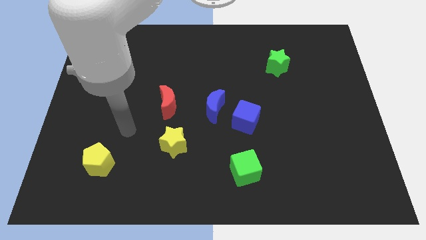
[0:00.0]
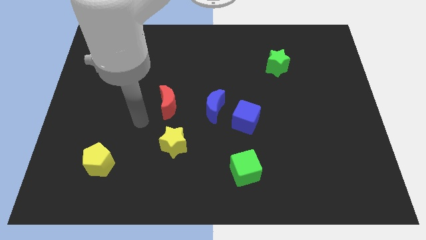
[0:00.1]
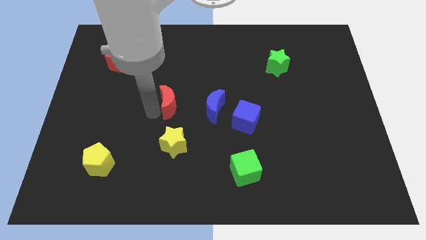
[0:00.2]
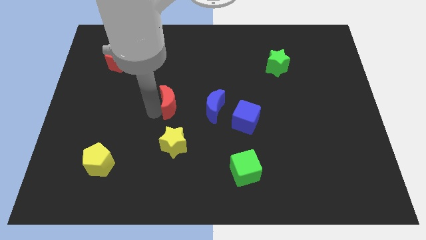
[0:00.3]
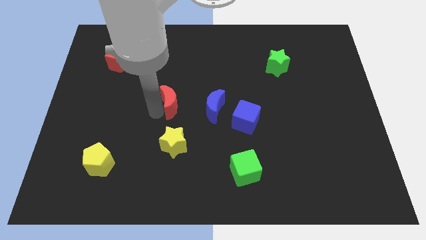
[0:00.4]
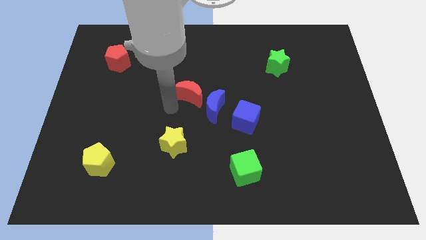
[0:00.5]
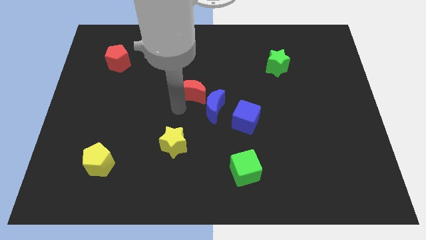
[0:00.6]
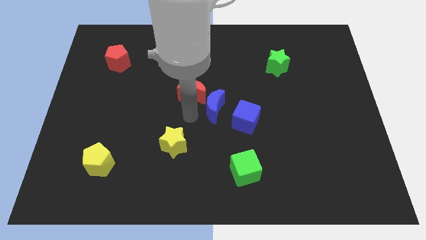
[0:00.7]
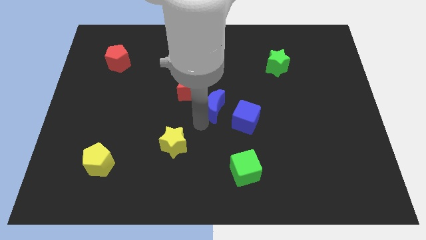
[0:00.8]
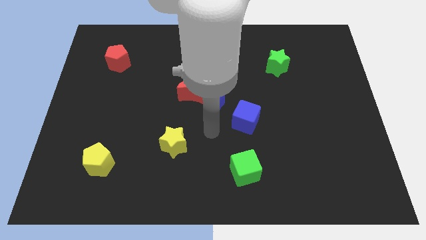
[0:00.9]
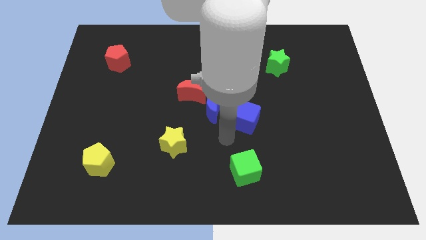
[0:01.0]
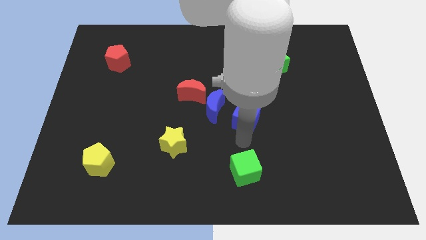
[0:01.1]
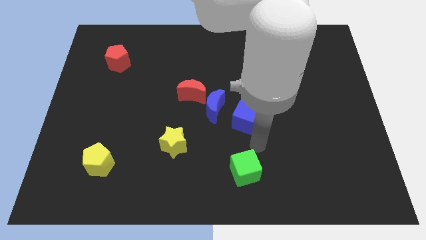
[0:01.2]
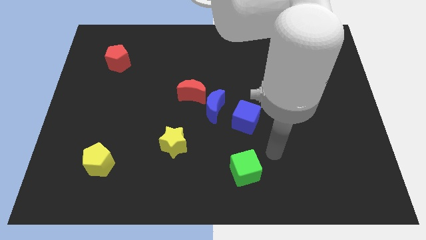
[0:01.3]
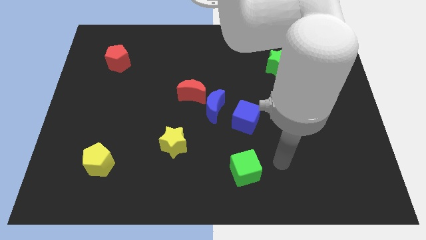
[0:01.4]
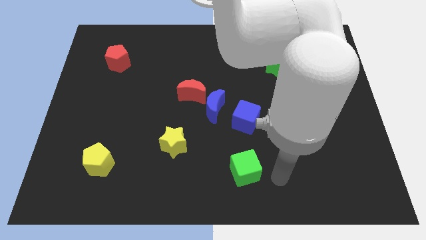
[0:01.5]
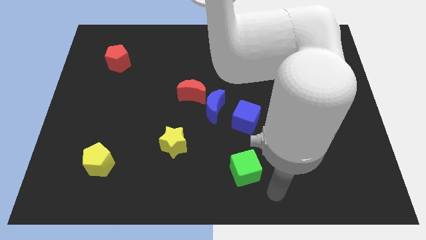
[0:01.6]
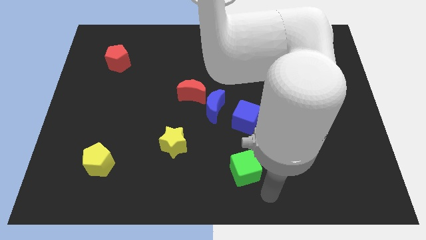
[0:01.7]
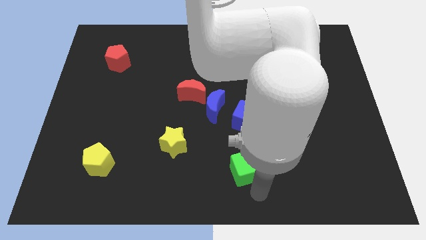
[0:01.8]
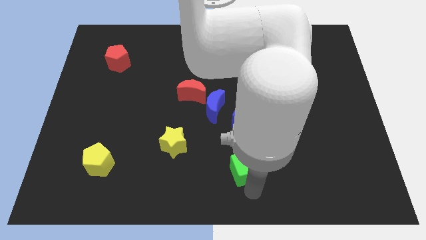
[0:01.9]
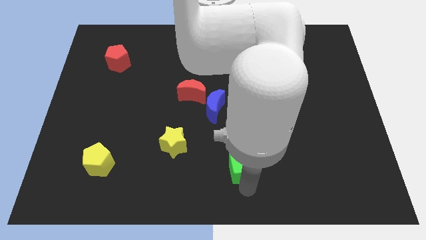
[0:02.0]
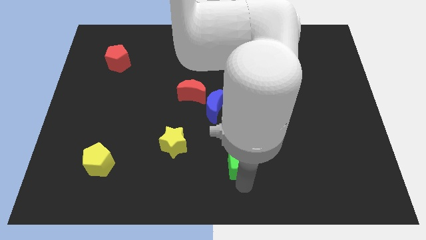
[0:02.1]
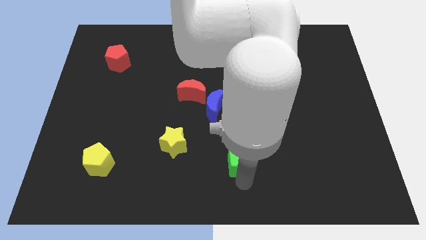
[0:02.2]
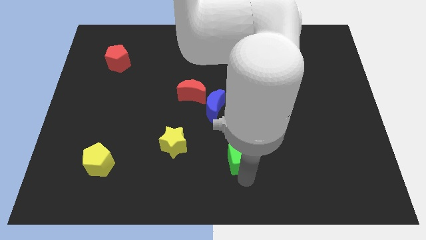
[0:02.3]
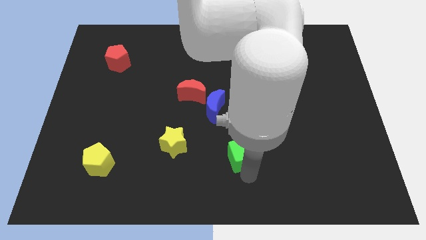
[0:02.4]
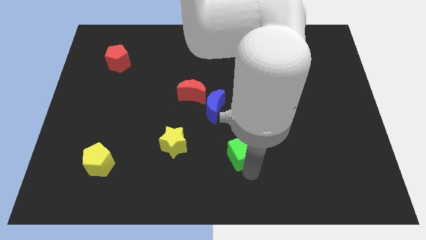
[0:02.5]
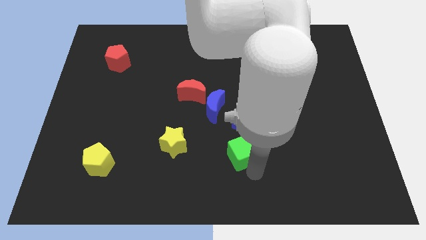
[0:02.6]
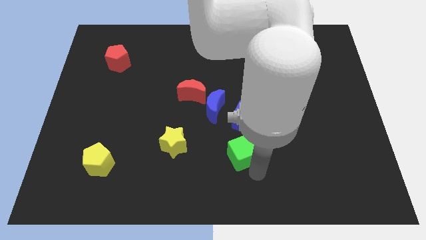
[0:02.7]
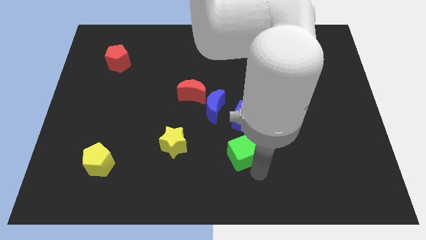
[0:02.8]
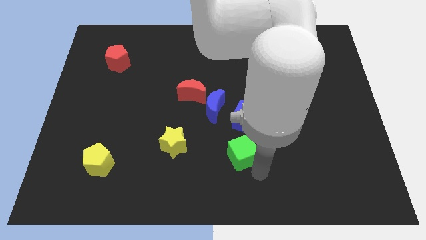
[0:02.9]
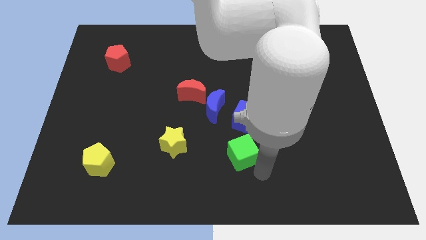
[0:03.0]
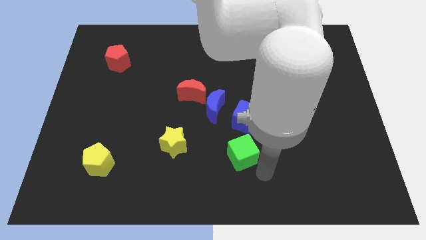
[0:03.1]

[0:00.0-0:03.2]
place the green cube right to the yellow star

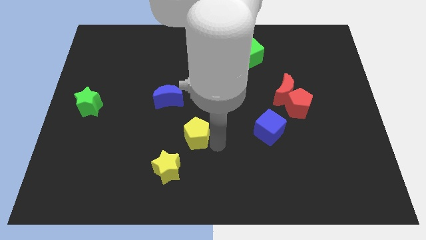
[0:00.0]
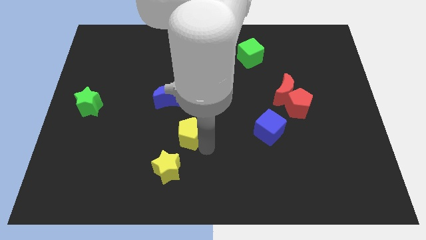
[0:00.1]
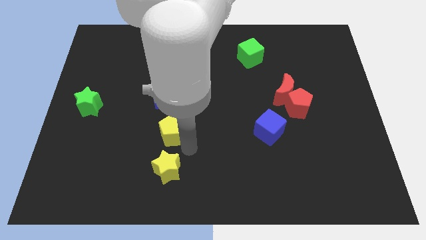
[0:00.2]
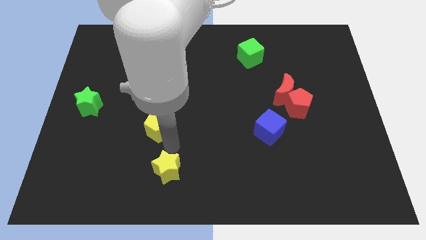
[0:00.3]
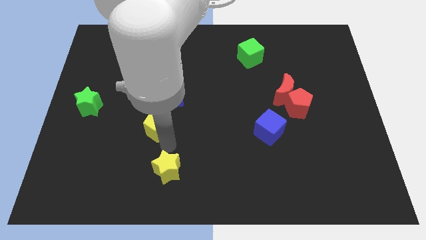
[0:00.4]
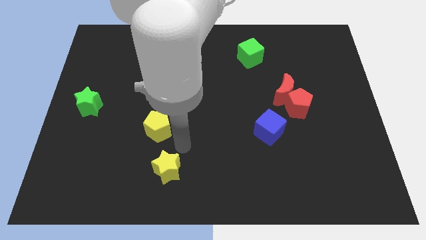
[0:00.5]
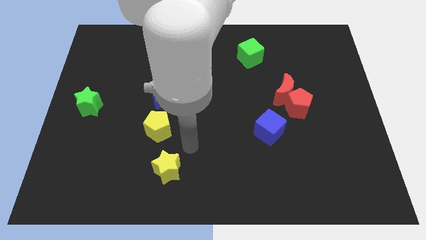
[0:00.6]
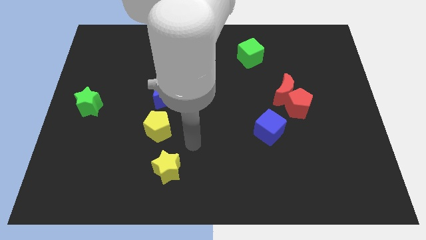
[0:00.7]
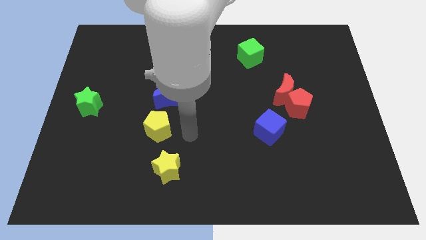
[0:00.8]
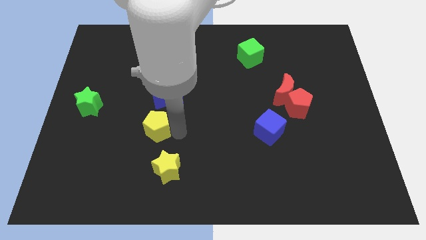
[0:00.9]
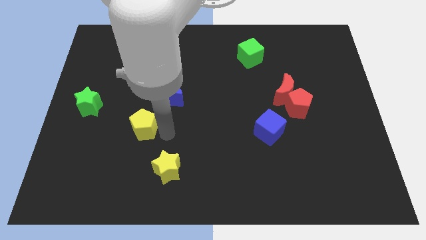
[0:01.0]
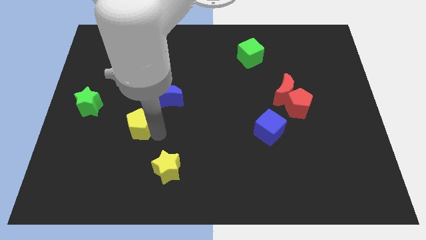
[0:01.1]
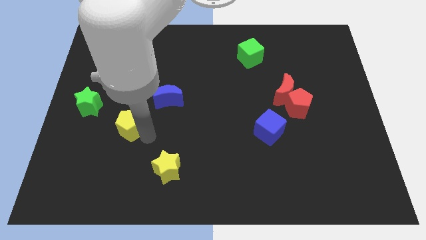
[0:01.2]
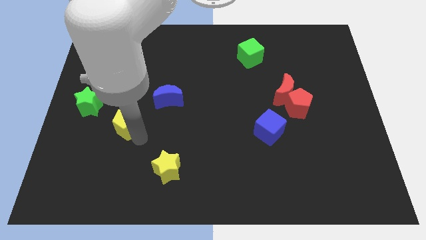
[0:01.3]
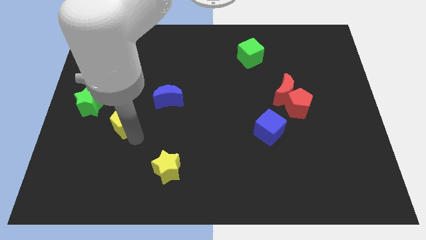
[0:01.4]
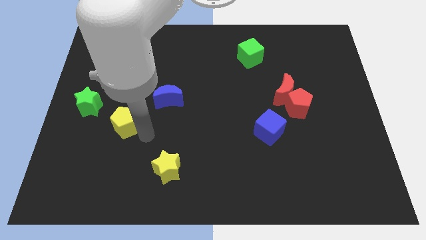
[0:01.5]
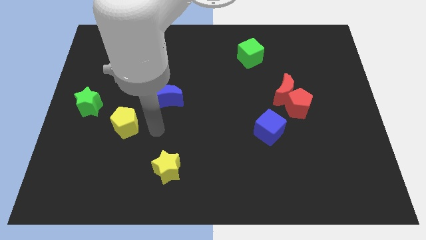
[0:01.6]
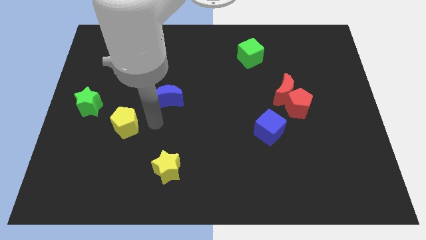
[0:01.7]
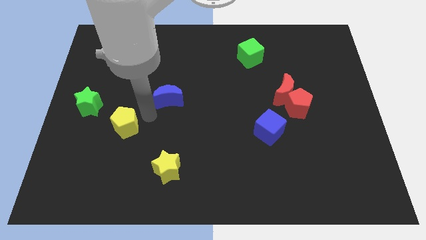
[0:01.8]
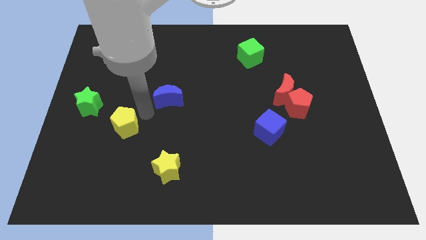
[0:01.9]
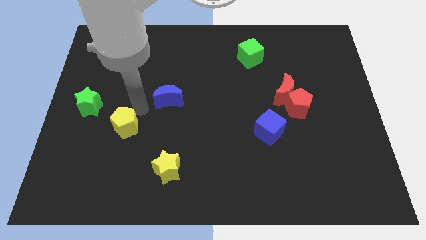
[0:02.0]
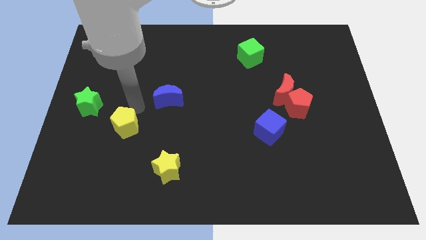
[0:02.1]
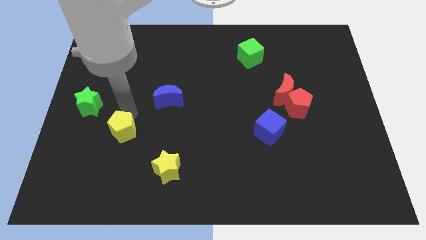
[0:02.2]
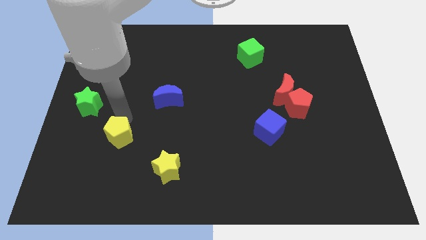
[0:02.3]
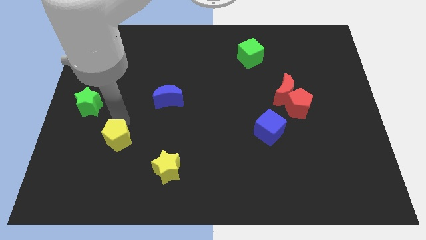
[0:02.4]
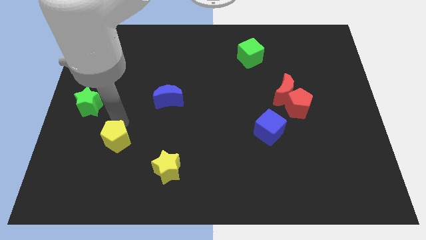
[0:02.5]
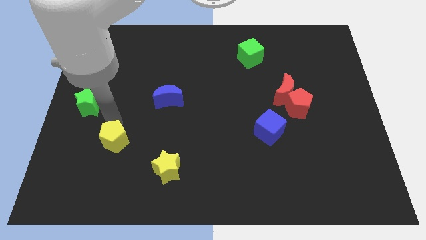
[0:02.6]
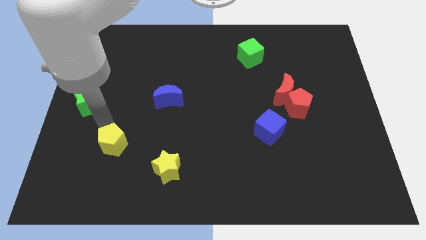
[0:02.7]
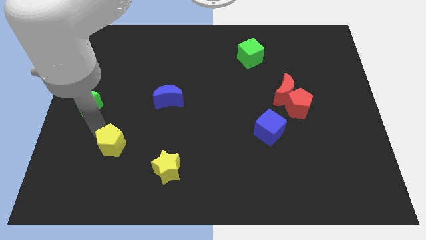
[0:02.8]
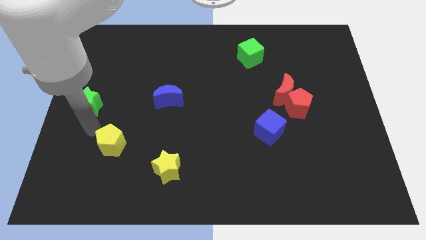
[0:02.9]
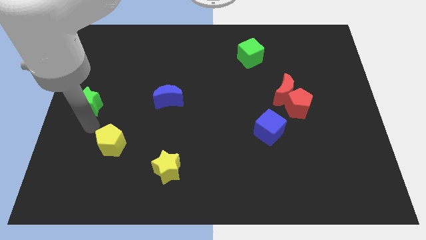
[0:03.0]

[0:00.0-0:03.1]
place the yellow pentagon in between green star and yellow star

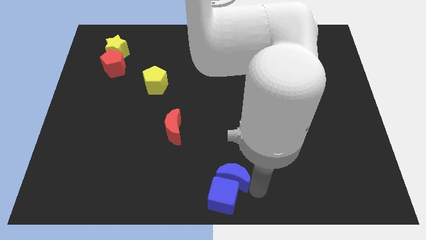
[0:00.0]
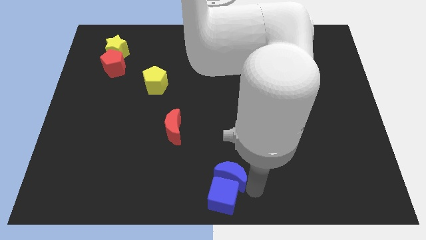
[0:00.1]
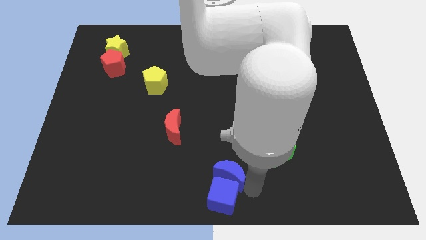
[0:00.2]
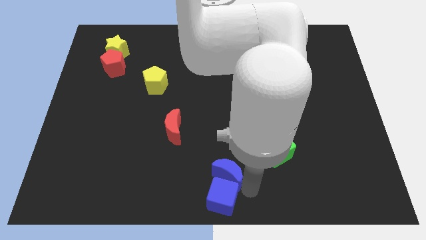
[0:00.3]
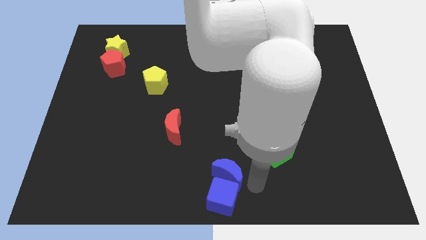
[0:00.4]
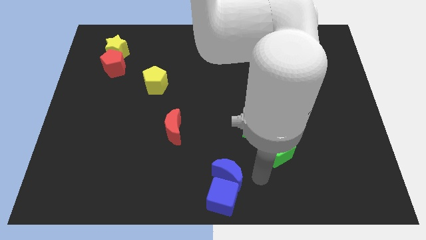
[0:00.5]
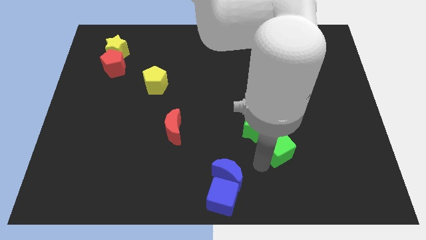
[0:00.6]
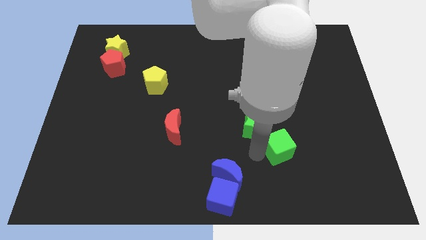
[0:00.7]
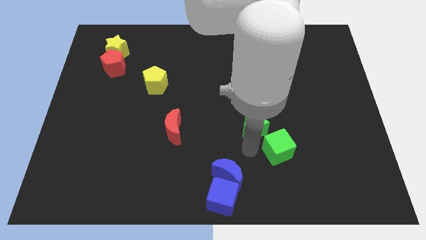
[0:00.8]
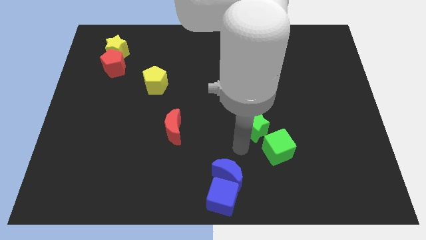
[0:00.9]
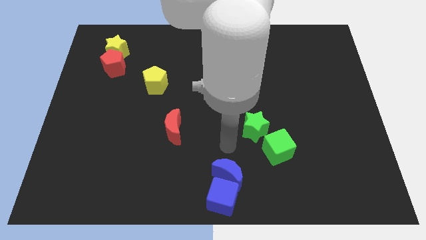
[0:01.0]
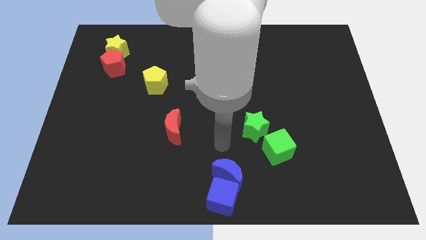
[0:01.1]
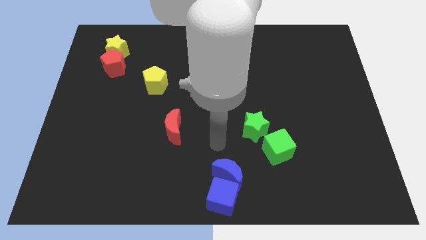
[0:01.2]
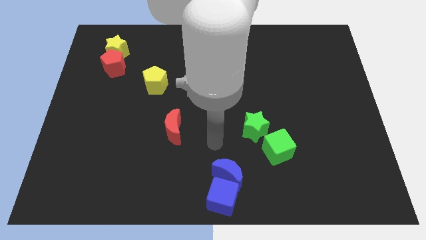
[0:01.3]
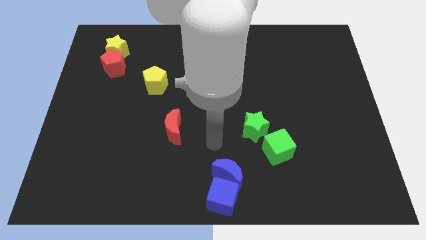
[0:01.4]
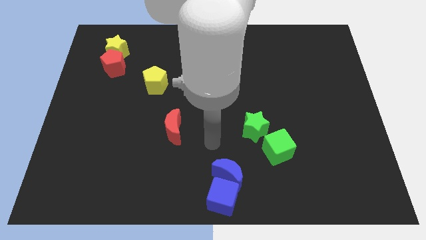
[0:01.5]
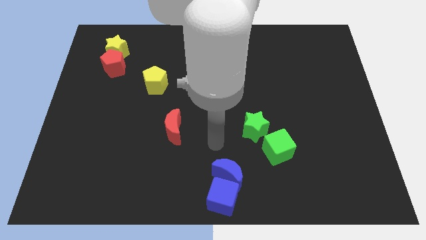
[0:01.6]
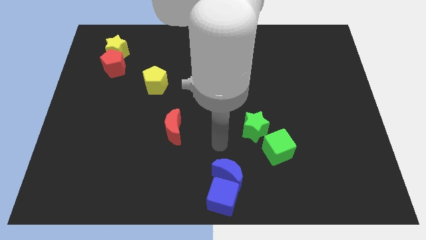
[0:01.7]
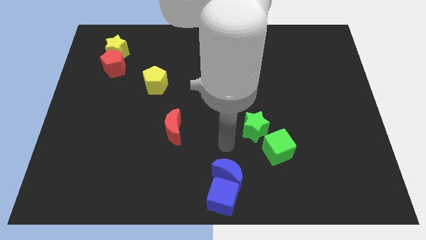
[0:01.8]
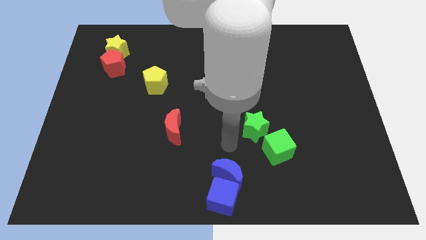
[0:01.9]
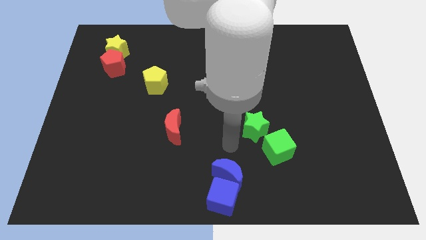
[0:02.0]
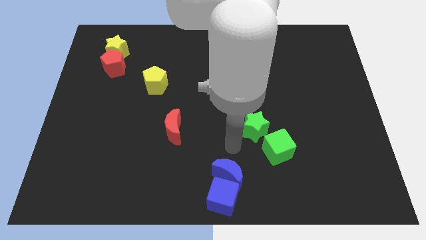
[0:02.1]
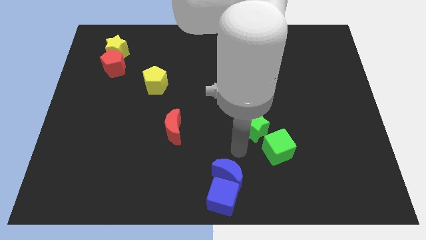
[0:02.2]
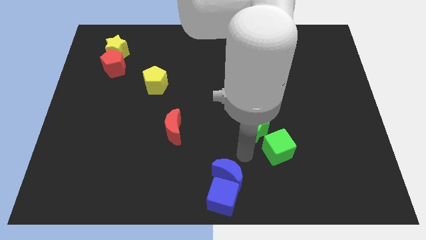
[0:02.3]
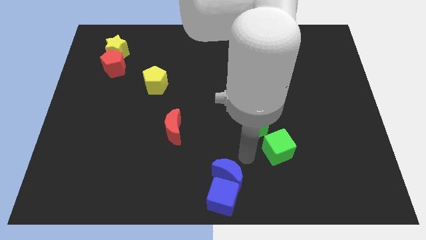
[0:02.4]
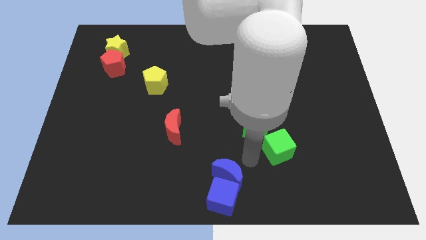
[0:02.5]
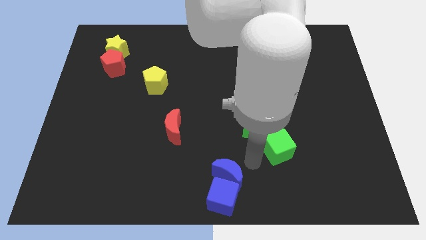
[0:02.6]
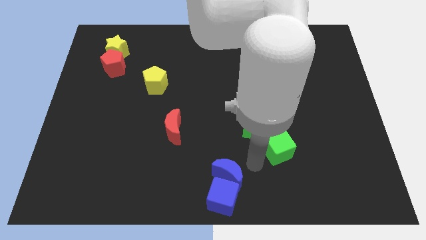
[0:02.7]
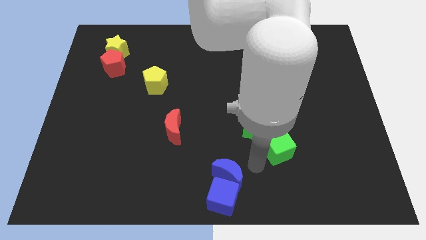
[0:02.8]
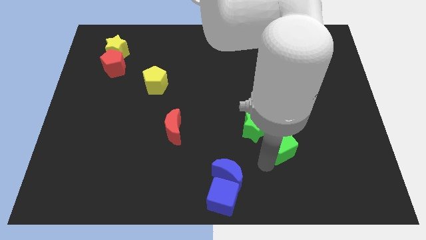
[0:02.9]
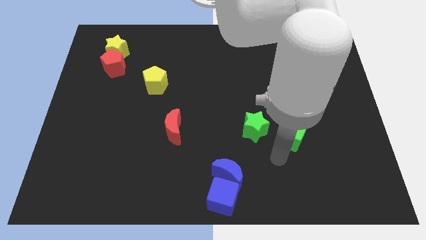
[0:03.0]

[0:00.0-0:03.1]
place your arm to the bottom of the green cube
